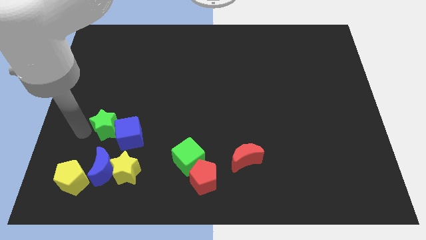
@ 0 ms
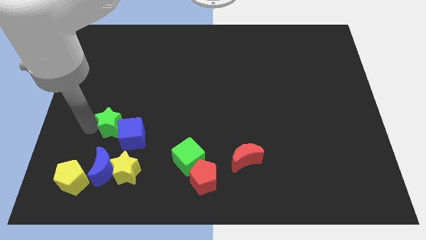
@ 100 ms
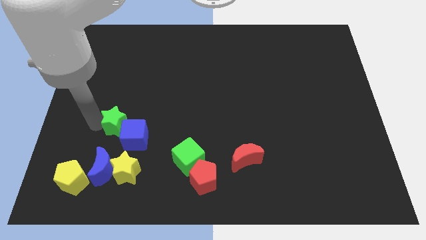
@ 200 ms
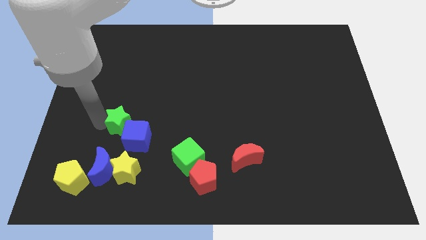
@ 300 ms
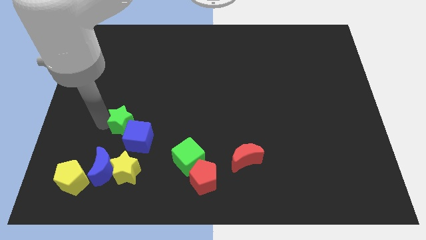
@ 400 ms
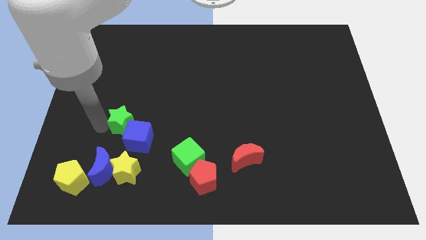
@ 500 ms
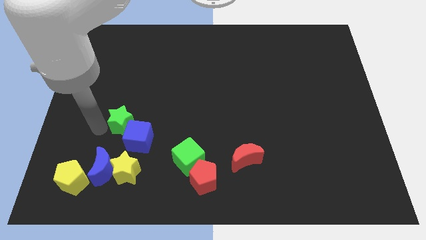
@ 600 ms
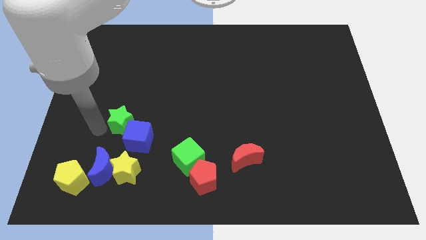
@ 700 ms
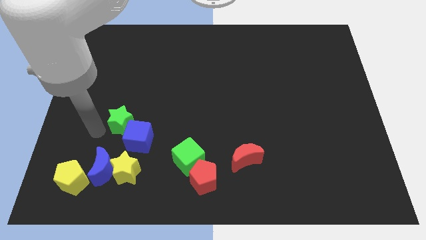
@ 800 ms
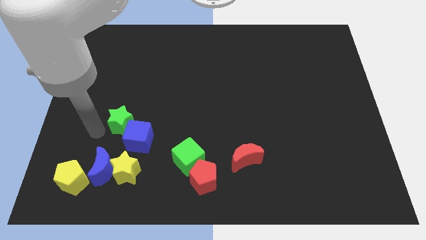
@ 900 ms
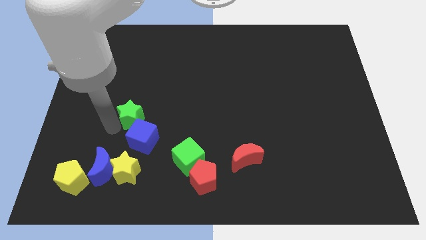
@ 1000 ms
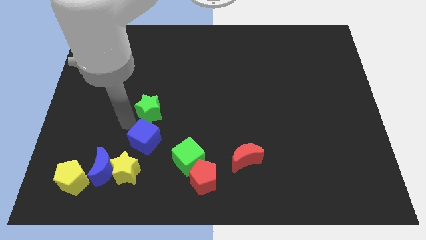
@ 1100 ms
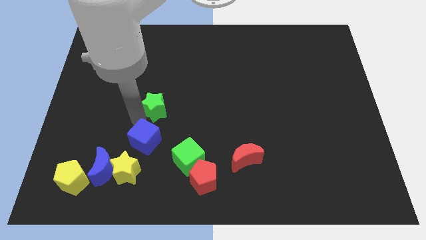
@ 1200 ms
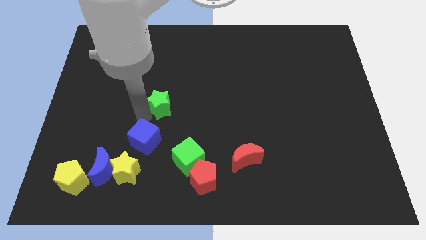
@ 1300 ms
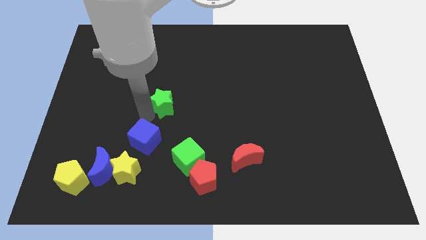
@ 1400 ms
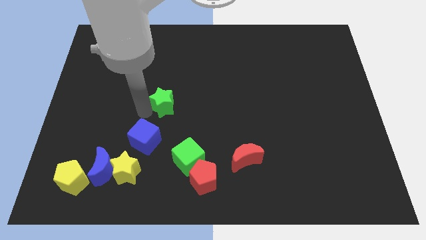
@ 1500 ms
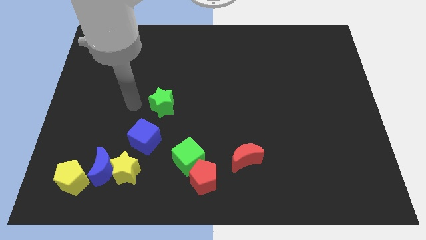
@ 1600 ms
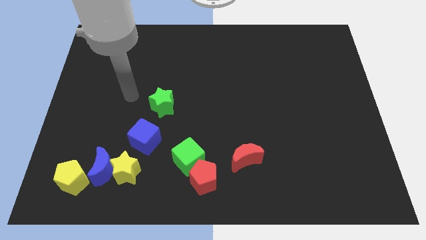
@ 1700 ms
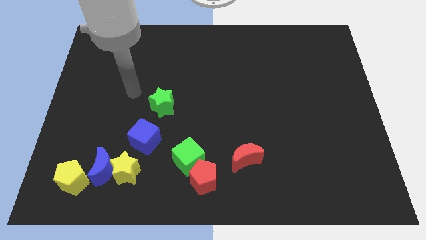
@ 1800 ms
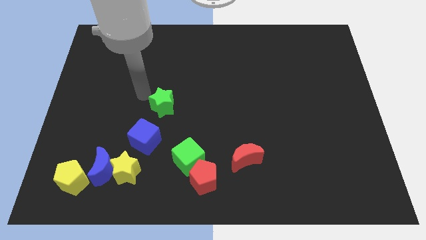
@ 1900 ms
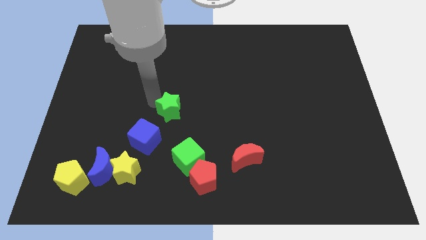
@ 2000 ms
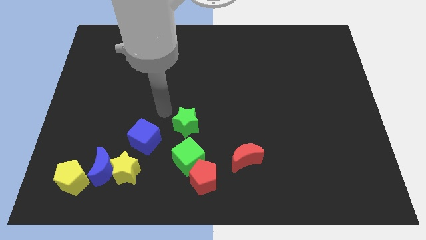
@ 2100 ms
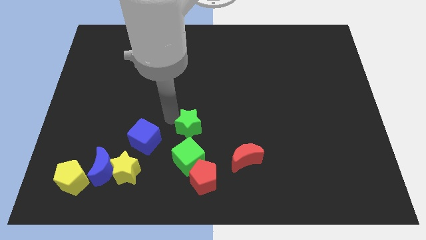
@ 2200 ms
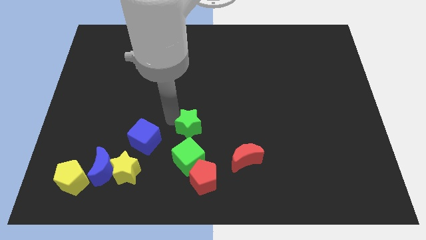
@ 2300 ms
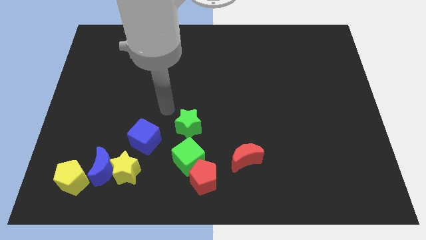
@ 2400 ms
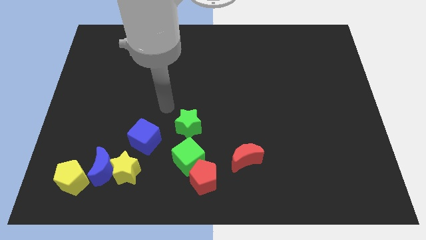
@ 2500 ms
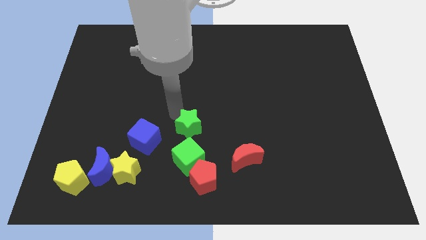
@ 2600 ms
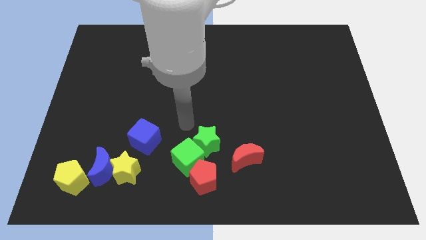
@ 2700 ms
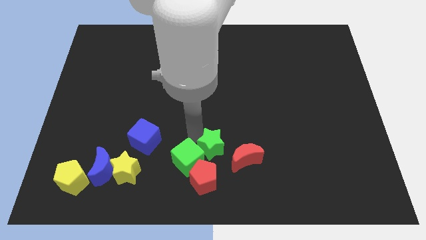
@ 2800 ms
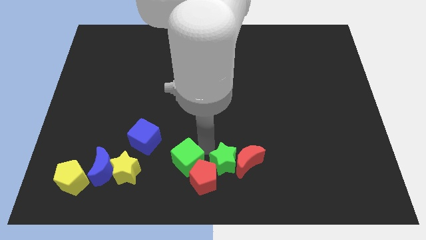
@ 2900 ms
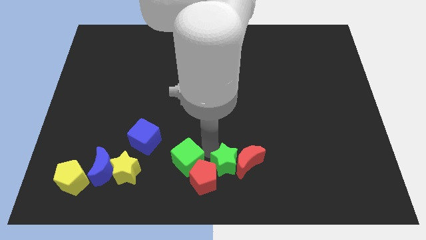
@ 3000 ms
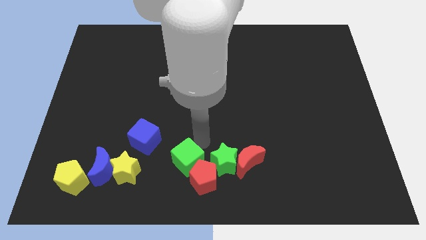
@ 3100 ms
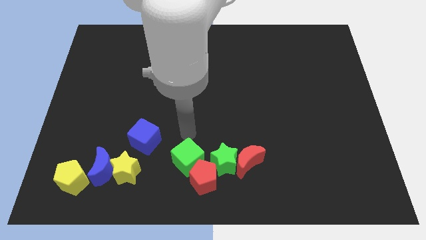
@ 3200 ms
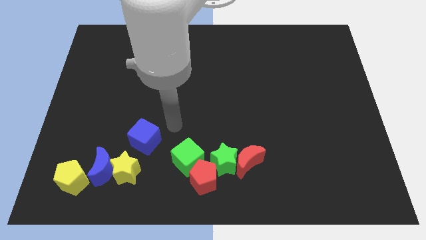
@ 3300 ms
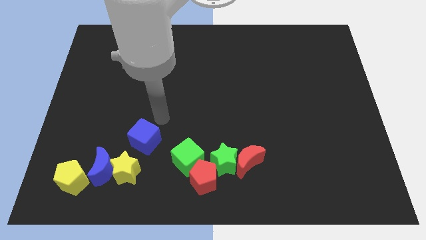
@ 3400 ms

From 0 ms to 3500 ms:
slide the green star into the red moon

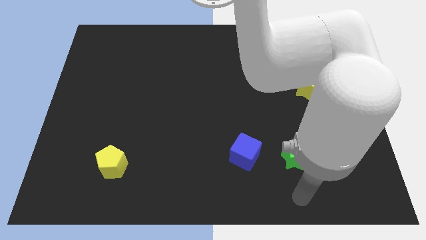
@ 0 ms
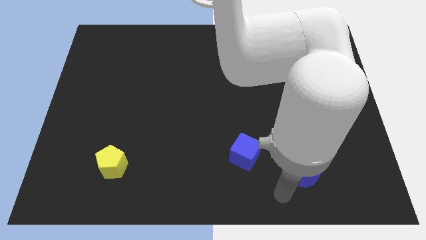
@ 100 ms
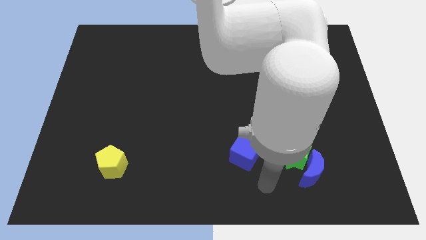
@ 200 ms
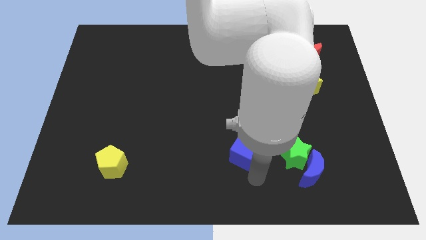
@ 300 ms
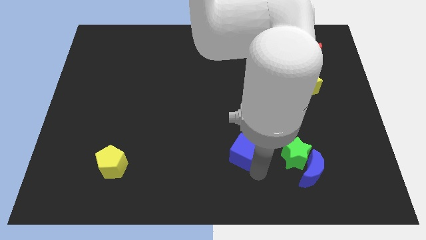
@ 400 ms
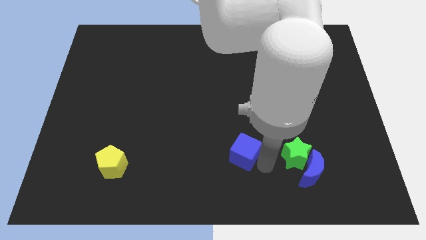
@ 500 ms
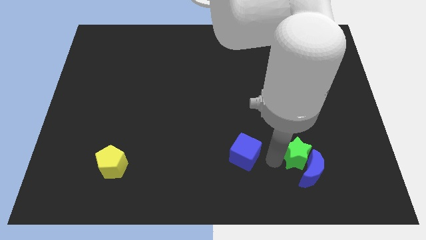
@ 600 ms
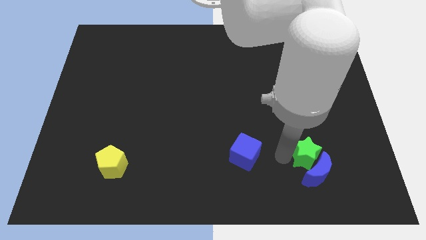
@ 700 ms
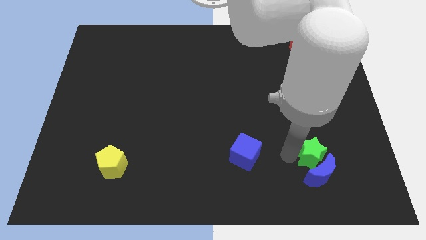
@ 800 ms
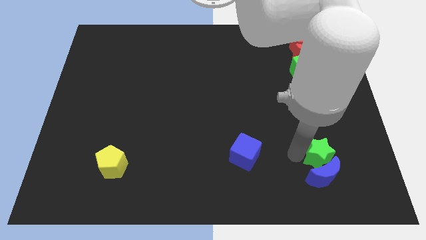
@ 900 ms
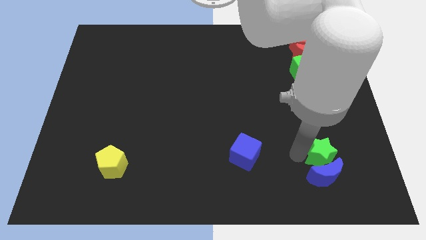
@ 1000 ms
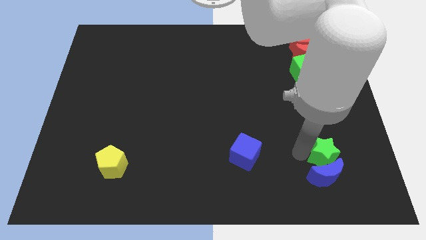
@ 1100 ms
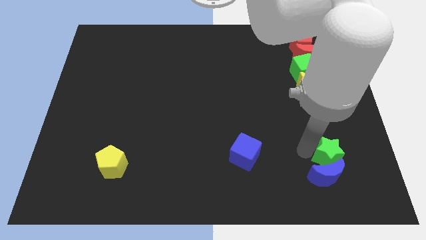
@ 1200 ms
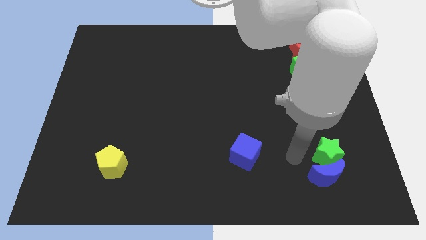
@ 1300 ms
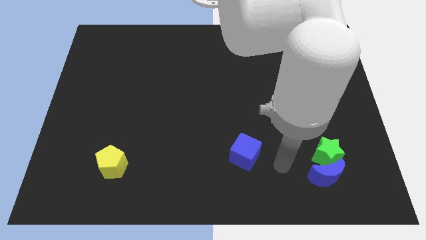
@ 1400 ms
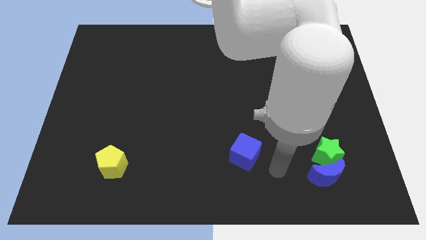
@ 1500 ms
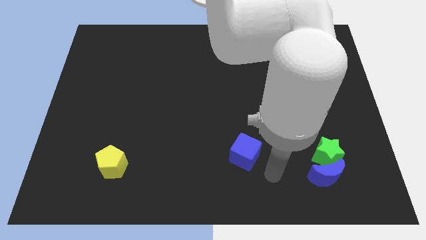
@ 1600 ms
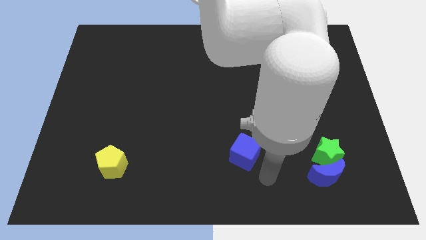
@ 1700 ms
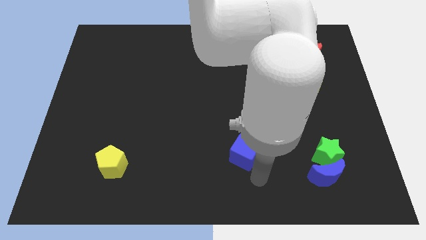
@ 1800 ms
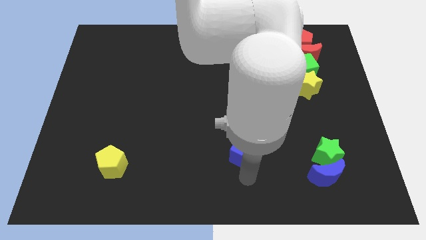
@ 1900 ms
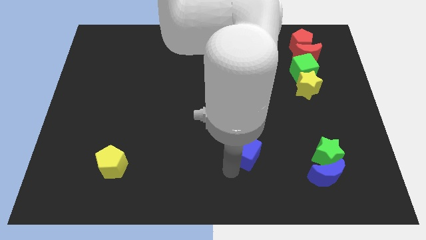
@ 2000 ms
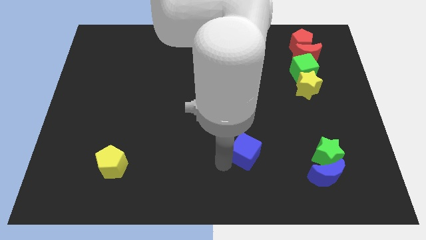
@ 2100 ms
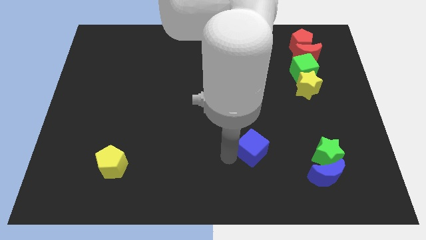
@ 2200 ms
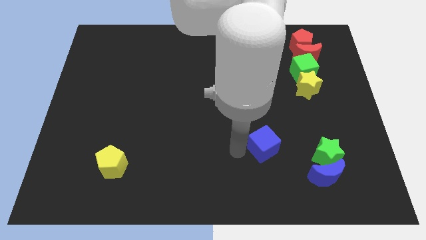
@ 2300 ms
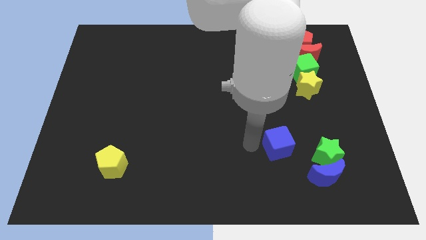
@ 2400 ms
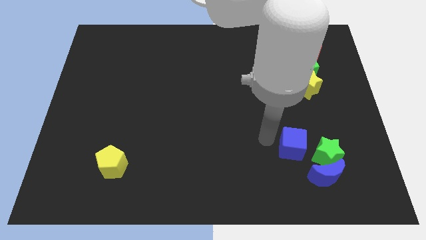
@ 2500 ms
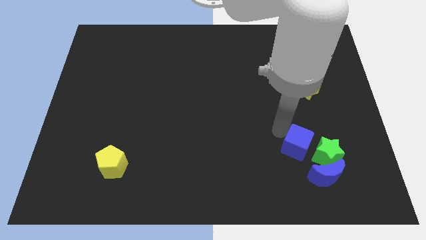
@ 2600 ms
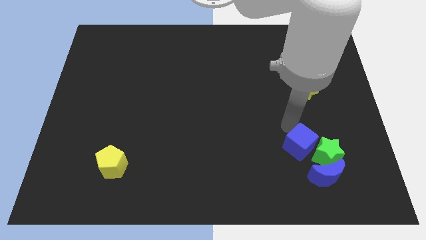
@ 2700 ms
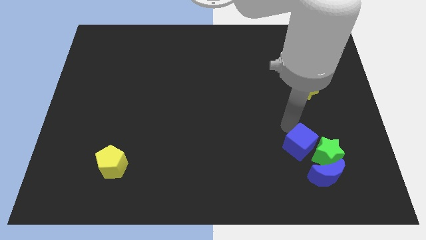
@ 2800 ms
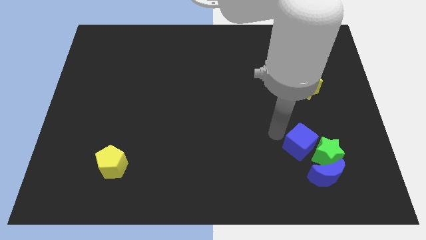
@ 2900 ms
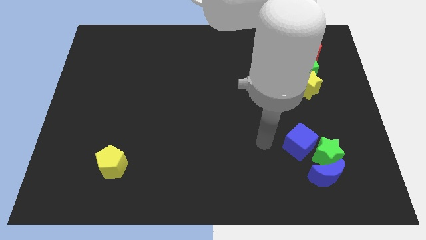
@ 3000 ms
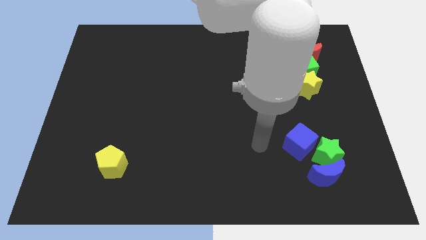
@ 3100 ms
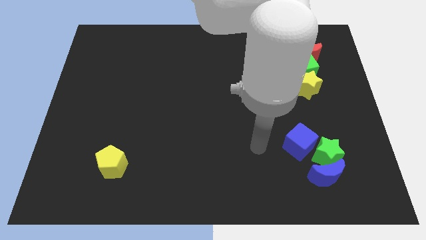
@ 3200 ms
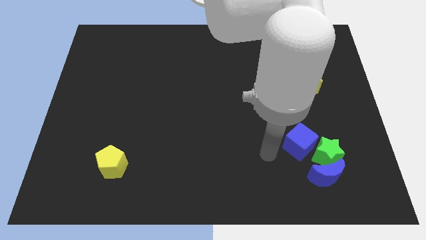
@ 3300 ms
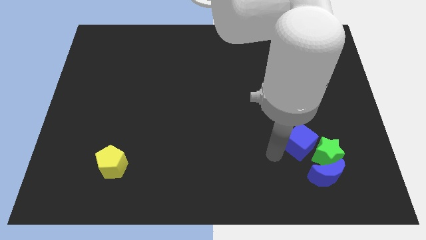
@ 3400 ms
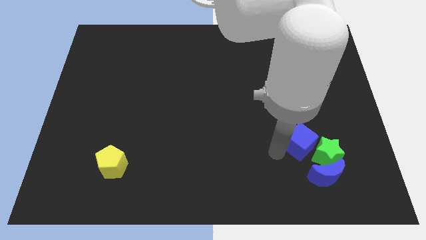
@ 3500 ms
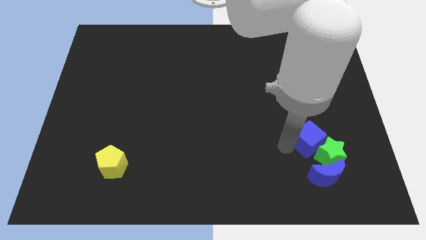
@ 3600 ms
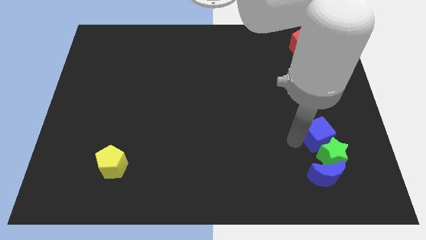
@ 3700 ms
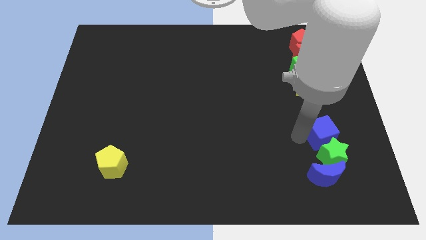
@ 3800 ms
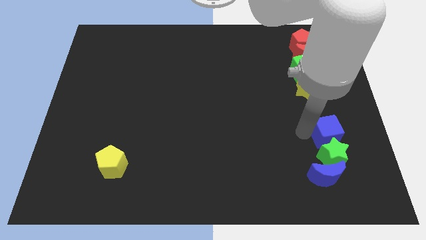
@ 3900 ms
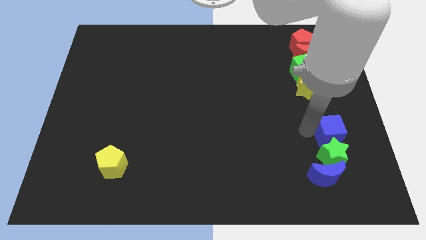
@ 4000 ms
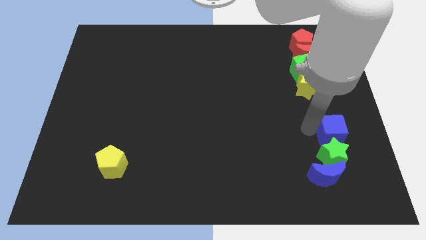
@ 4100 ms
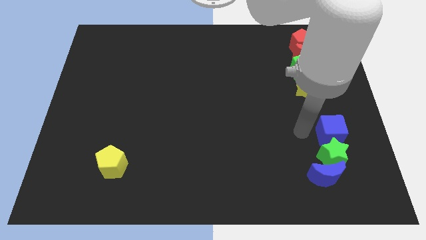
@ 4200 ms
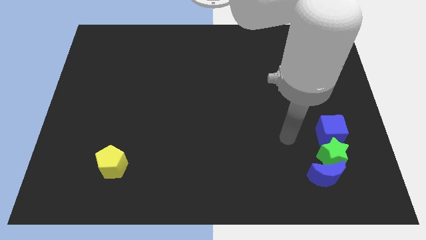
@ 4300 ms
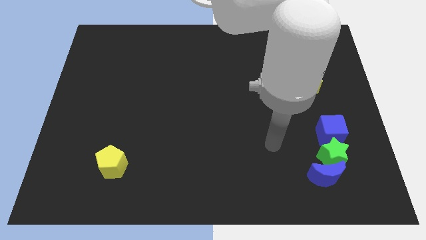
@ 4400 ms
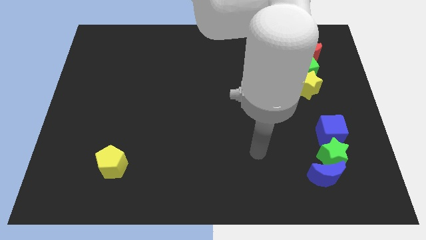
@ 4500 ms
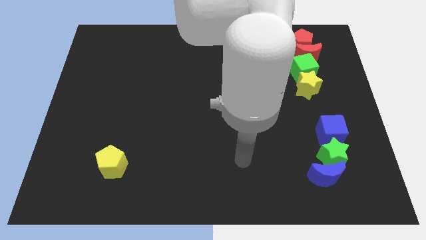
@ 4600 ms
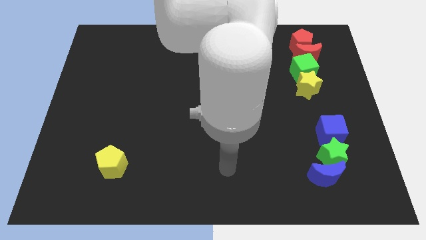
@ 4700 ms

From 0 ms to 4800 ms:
form a vertical line with blue moon green star and blue cube

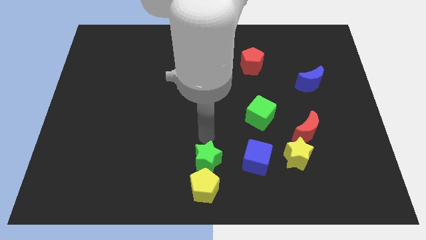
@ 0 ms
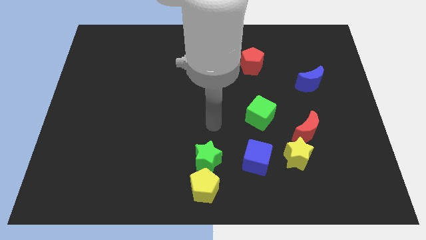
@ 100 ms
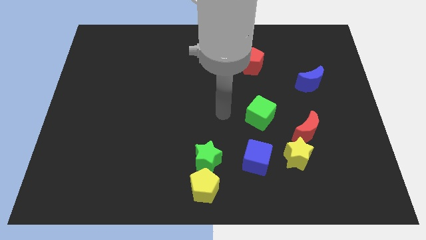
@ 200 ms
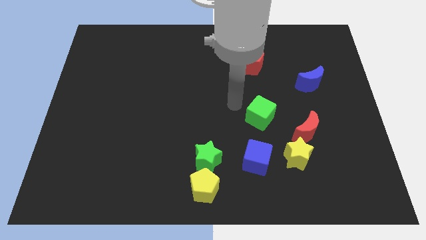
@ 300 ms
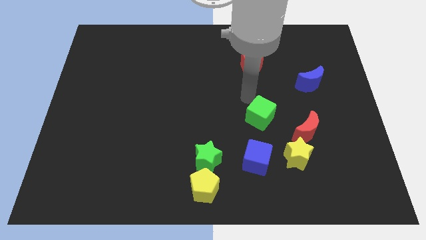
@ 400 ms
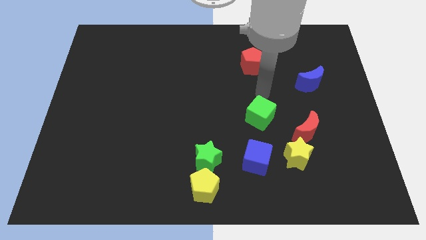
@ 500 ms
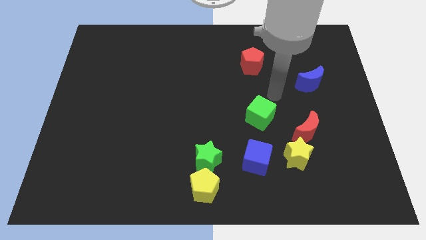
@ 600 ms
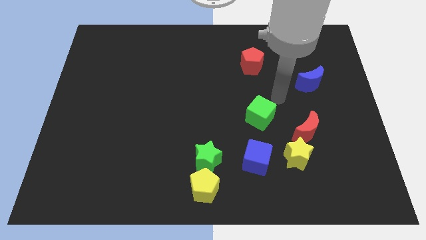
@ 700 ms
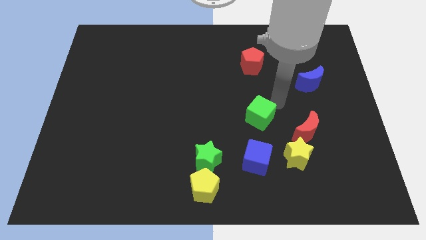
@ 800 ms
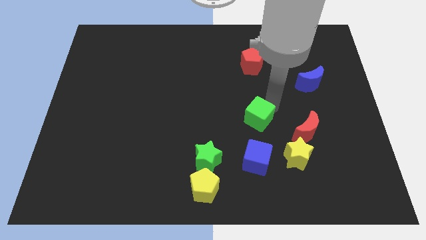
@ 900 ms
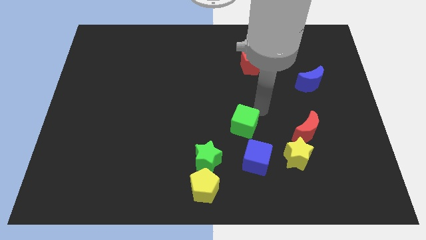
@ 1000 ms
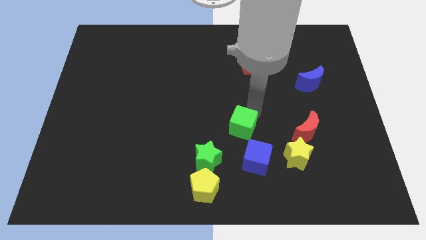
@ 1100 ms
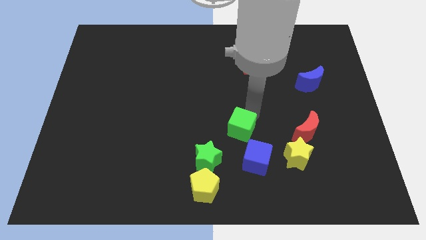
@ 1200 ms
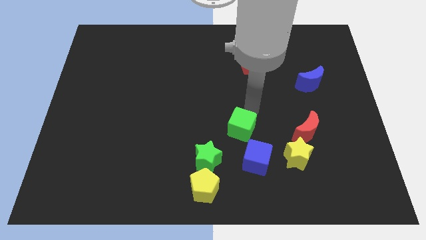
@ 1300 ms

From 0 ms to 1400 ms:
move the green cube towards the blue cube
